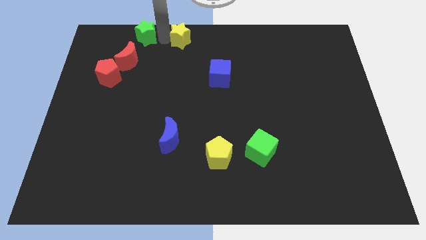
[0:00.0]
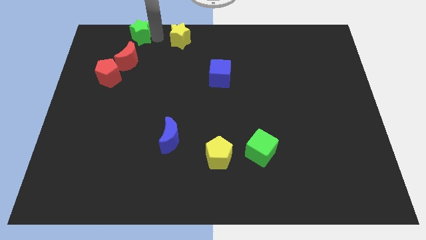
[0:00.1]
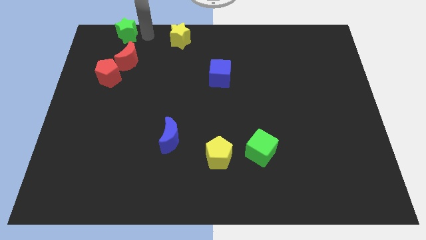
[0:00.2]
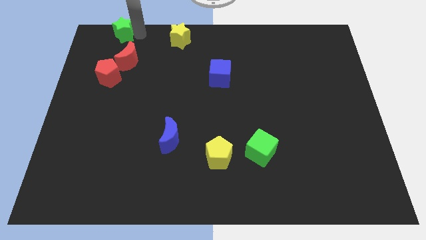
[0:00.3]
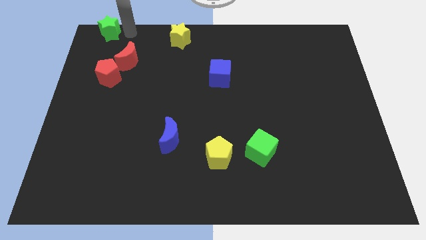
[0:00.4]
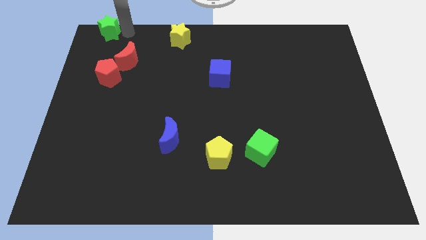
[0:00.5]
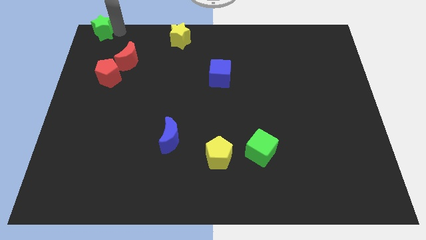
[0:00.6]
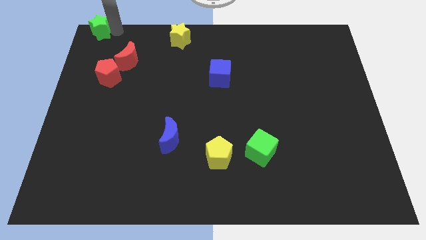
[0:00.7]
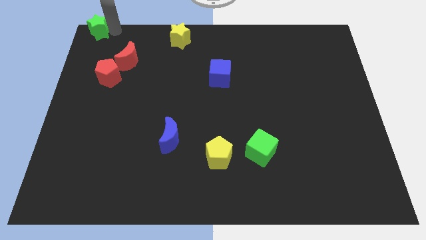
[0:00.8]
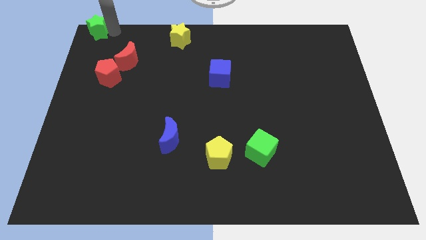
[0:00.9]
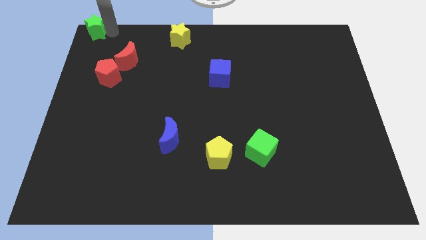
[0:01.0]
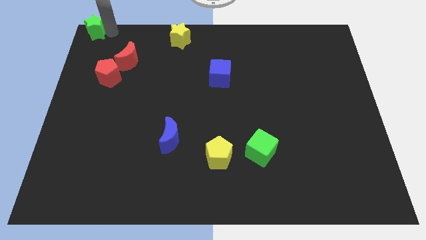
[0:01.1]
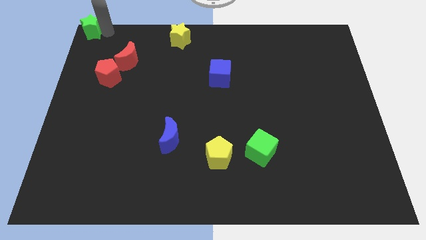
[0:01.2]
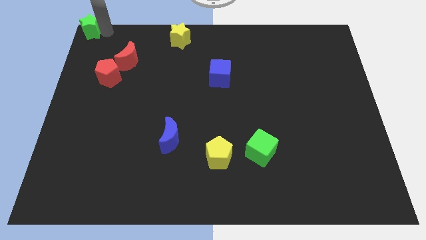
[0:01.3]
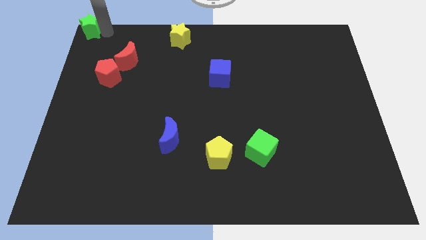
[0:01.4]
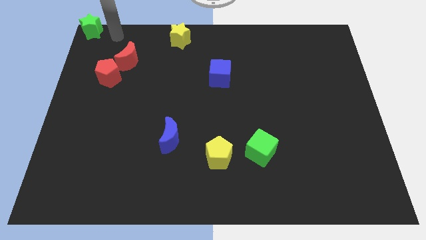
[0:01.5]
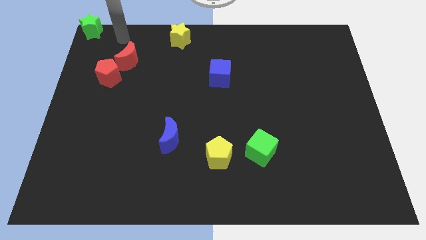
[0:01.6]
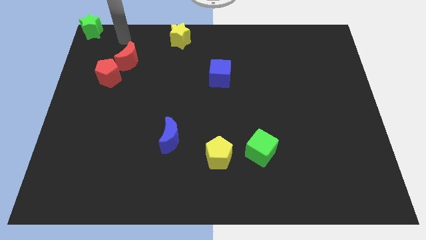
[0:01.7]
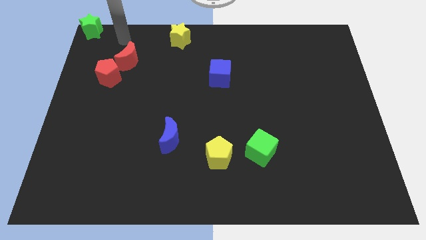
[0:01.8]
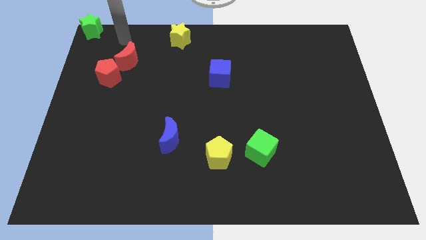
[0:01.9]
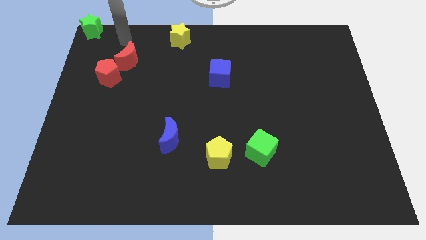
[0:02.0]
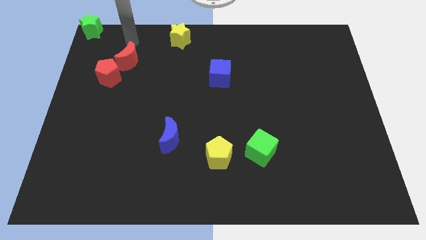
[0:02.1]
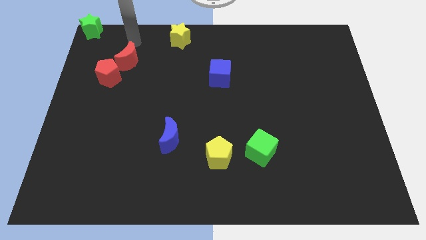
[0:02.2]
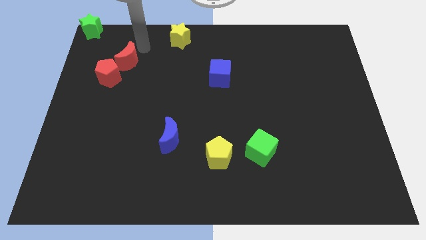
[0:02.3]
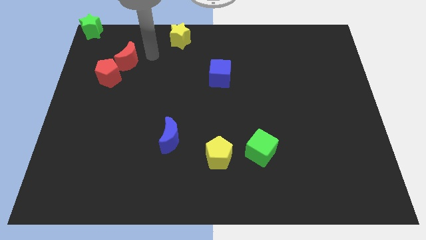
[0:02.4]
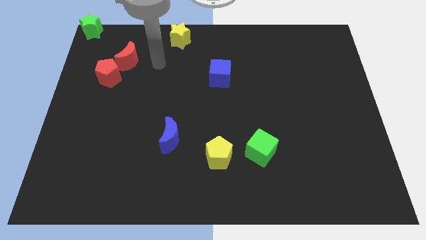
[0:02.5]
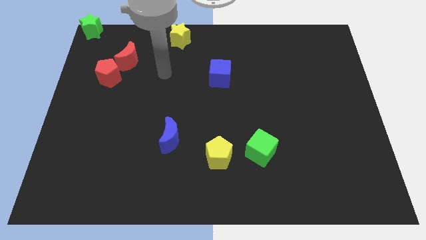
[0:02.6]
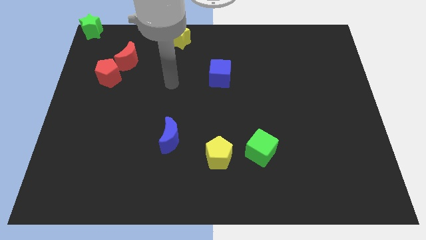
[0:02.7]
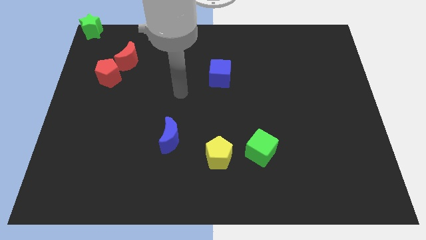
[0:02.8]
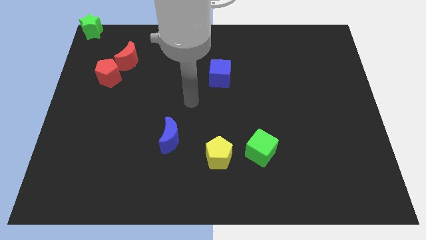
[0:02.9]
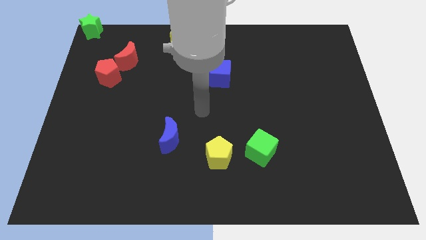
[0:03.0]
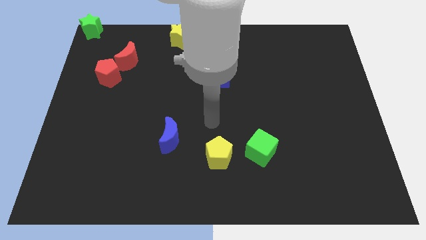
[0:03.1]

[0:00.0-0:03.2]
move the green star towards the top left corner of the board

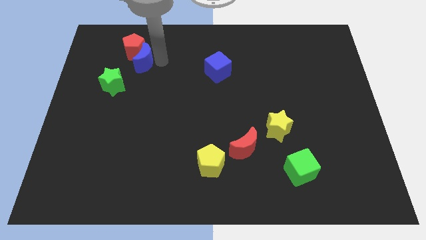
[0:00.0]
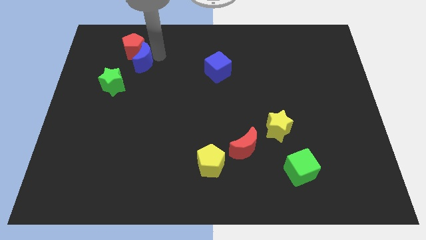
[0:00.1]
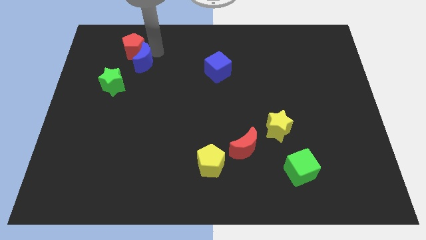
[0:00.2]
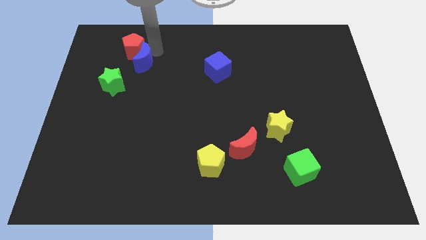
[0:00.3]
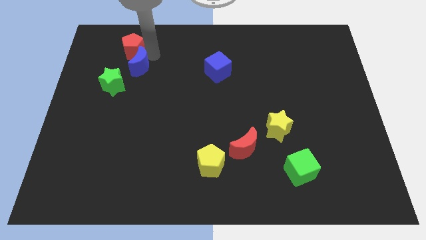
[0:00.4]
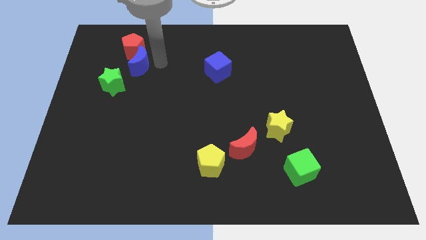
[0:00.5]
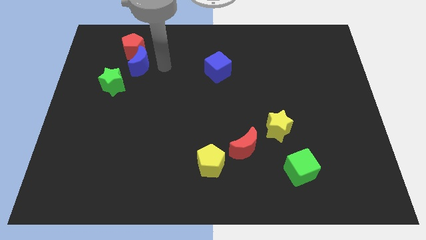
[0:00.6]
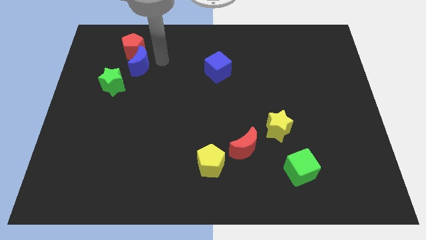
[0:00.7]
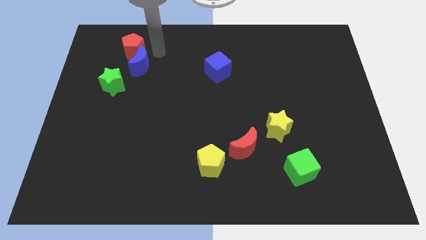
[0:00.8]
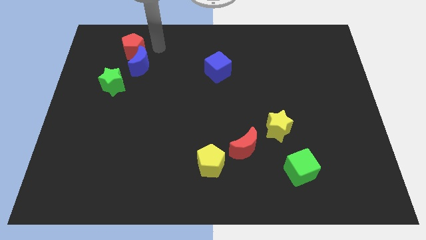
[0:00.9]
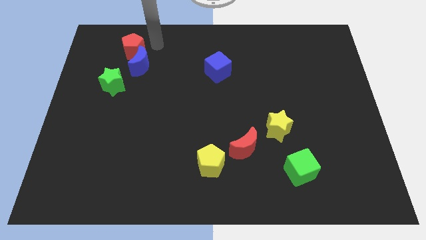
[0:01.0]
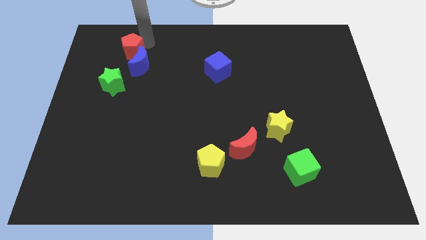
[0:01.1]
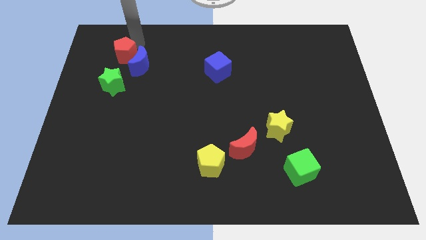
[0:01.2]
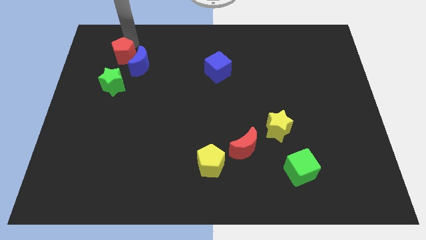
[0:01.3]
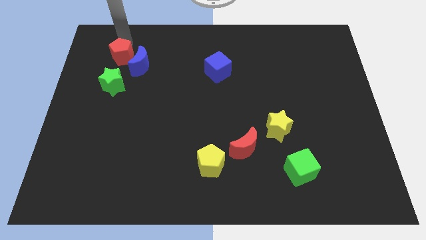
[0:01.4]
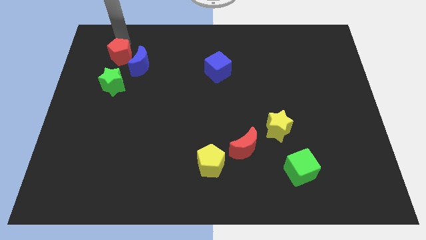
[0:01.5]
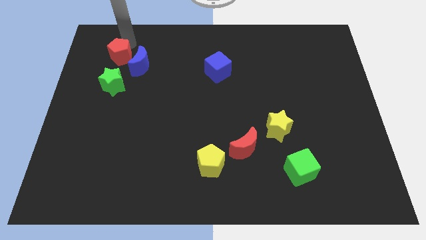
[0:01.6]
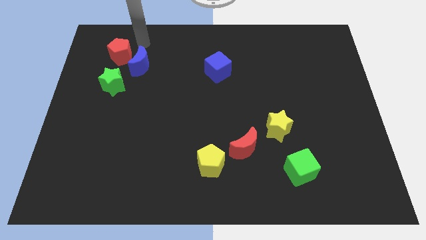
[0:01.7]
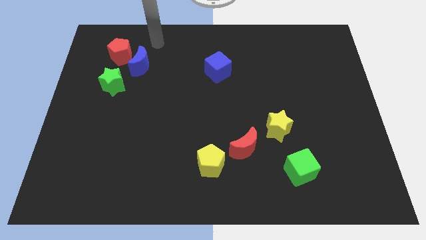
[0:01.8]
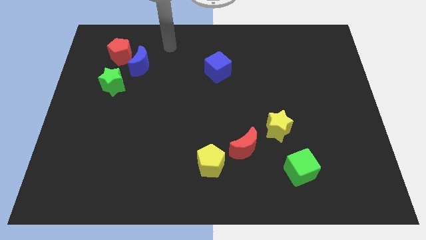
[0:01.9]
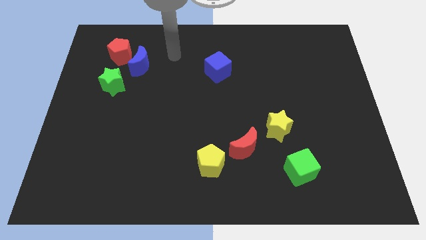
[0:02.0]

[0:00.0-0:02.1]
place the red pentagon above the green star

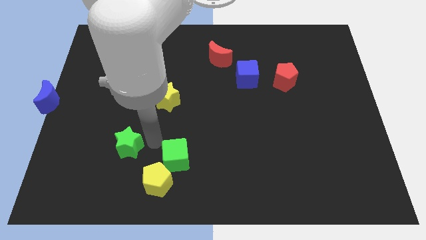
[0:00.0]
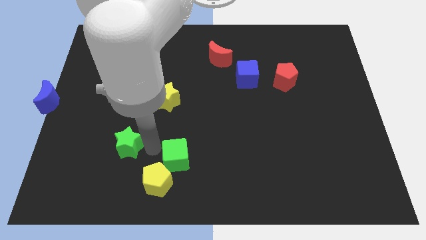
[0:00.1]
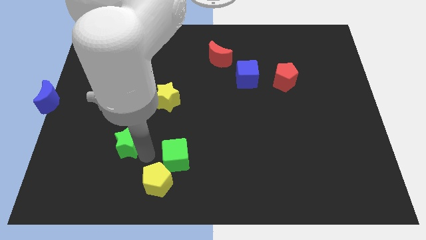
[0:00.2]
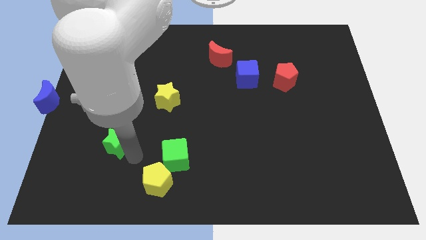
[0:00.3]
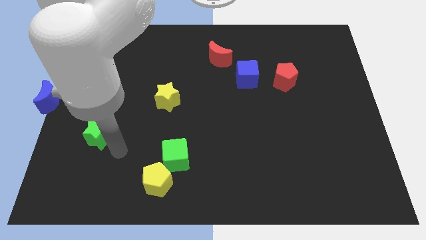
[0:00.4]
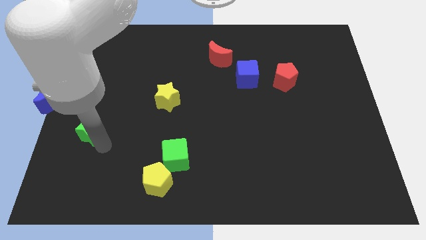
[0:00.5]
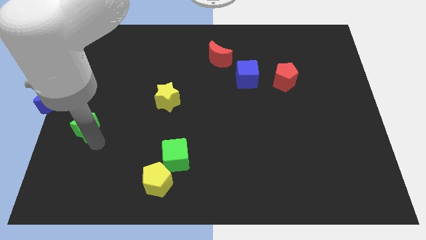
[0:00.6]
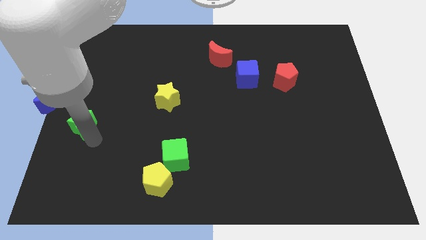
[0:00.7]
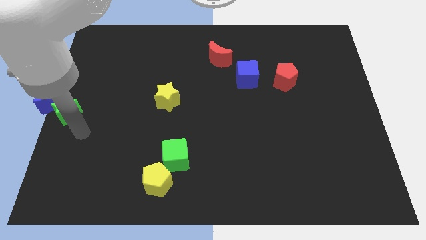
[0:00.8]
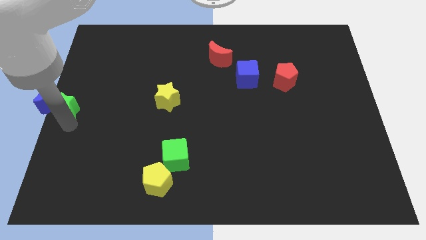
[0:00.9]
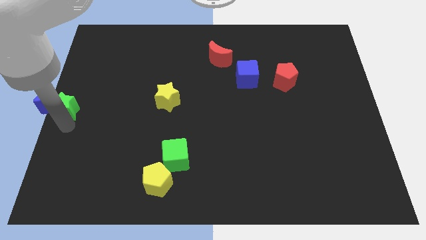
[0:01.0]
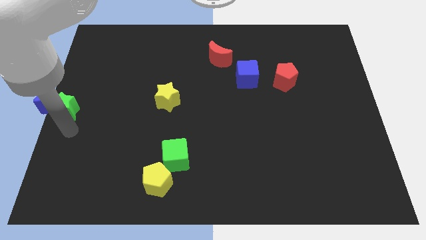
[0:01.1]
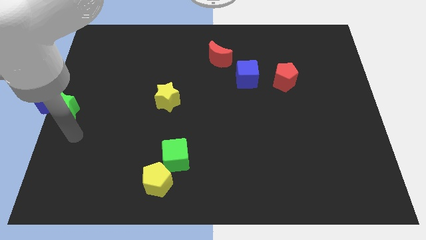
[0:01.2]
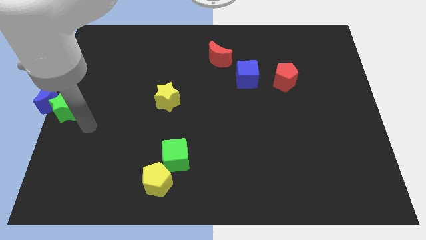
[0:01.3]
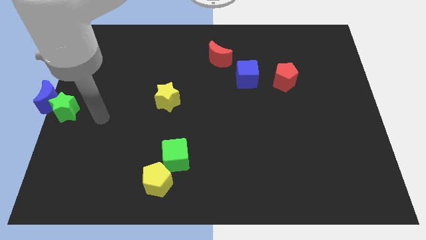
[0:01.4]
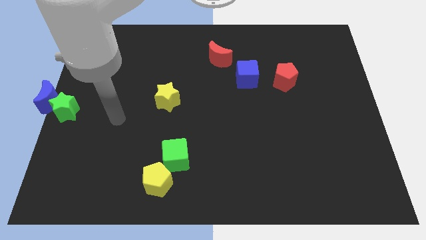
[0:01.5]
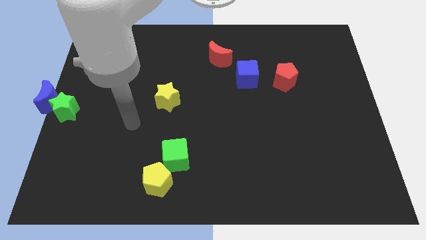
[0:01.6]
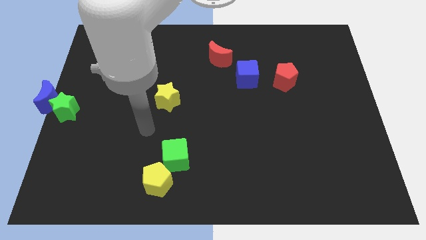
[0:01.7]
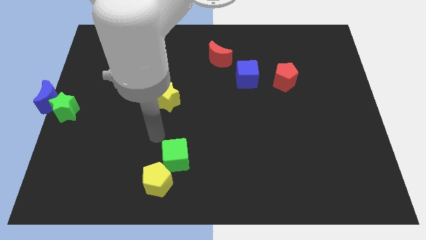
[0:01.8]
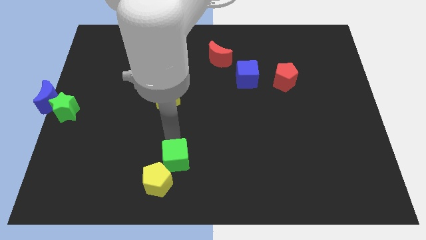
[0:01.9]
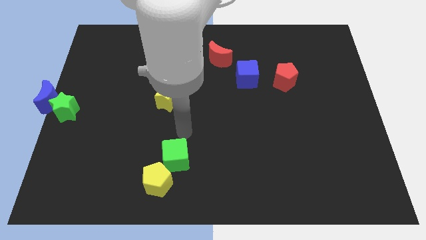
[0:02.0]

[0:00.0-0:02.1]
move green star along with blu moon to the center left

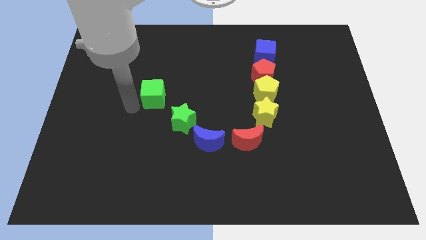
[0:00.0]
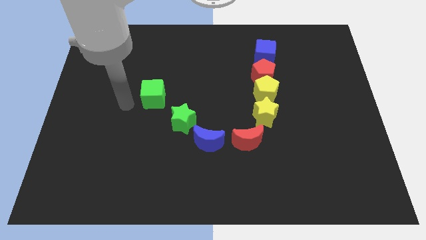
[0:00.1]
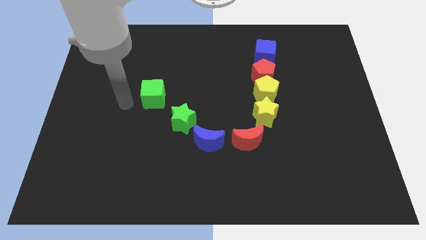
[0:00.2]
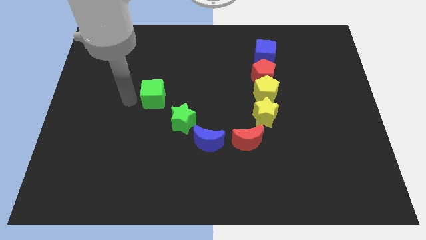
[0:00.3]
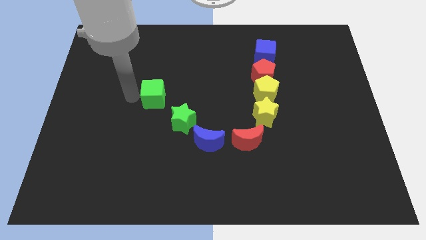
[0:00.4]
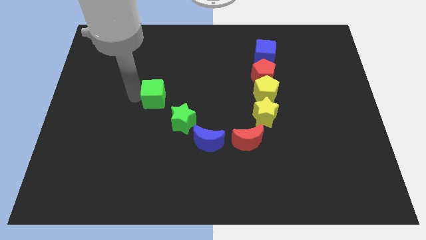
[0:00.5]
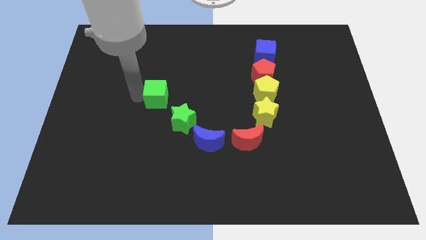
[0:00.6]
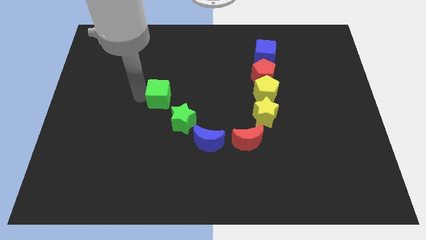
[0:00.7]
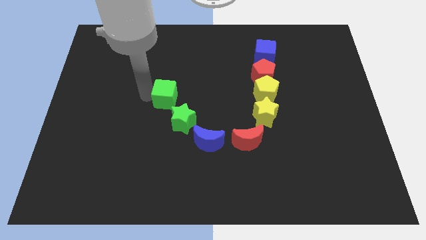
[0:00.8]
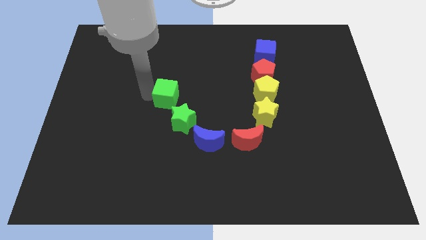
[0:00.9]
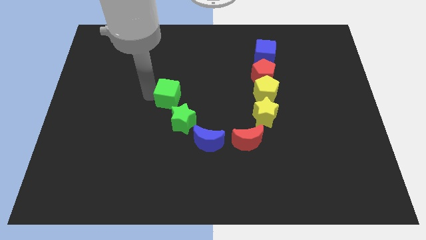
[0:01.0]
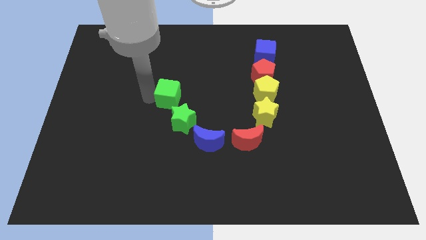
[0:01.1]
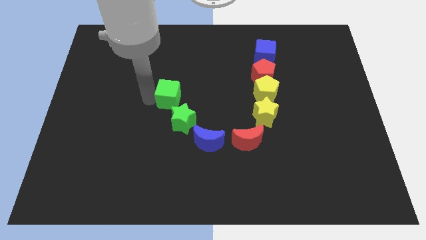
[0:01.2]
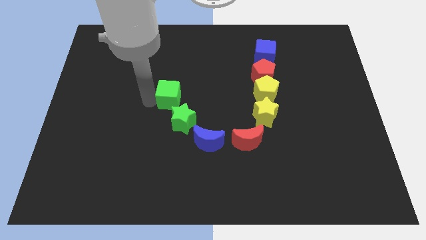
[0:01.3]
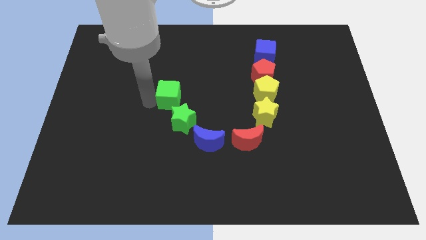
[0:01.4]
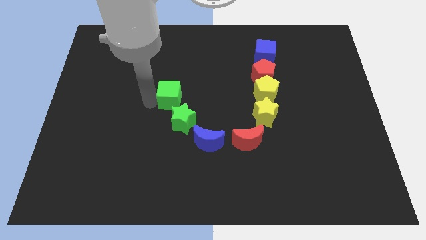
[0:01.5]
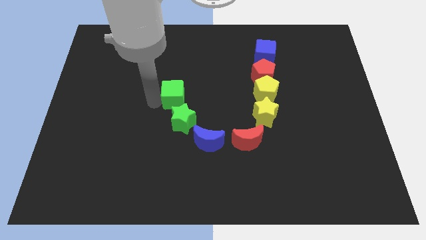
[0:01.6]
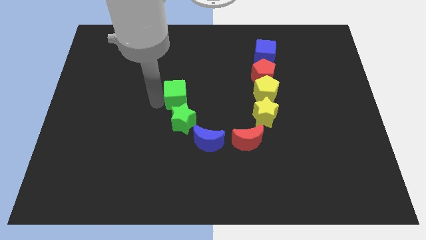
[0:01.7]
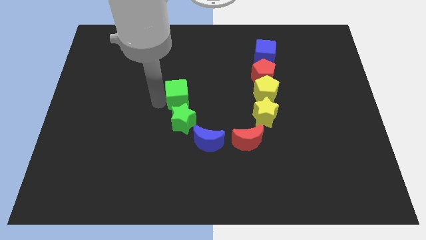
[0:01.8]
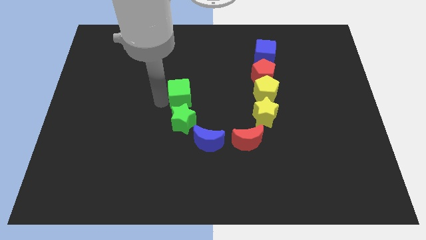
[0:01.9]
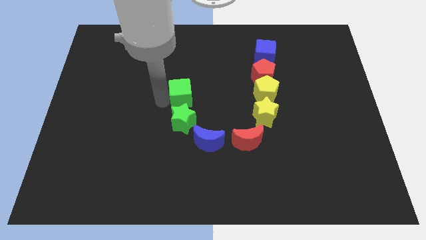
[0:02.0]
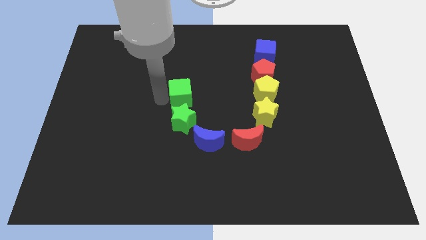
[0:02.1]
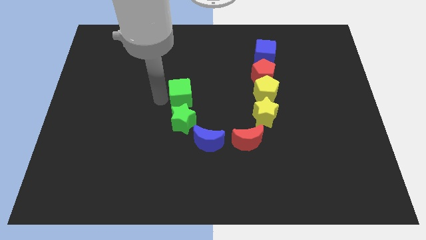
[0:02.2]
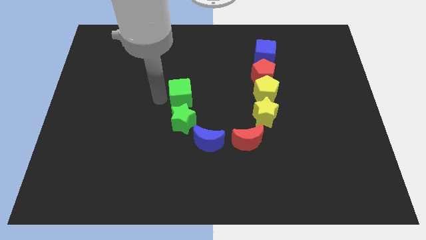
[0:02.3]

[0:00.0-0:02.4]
place green cube to the top of green star
